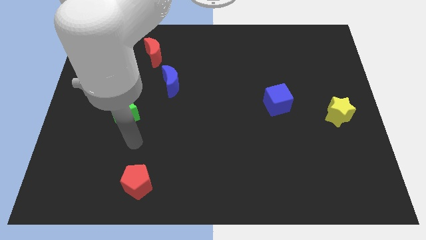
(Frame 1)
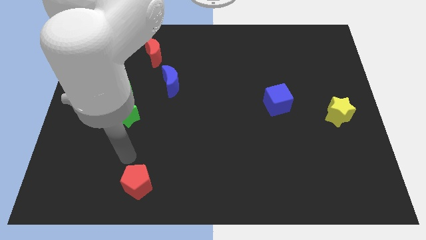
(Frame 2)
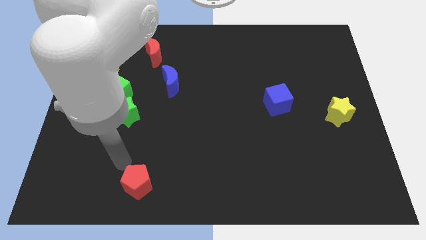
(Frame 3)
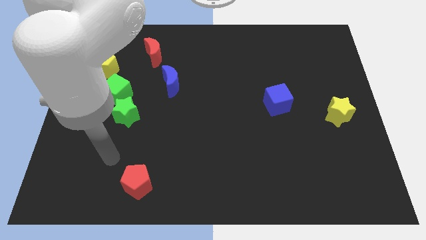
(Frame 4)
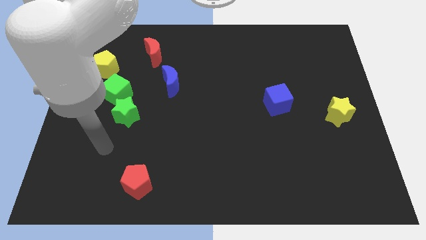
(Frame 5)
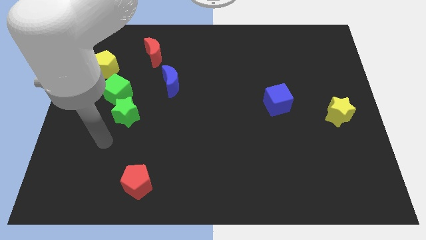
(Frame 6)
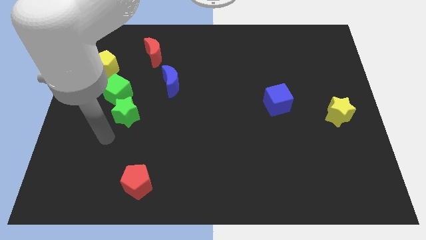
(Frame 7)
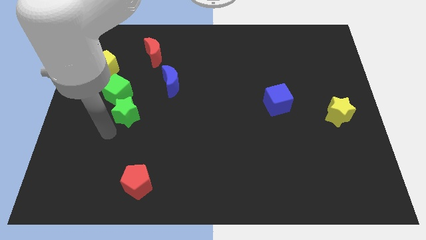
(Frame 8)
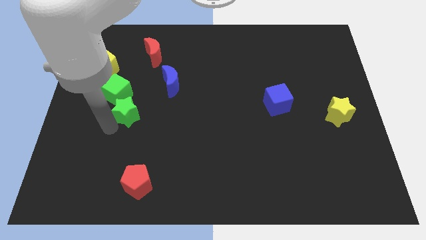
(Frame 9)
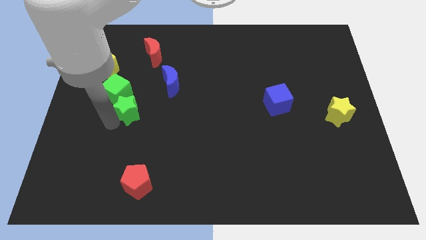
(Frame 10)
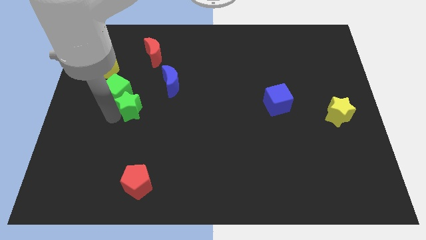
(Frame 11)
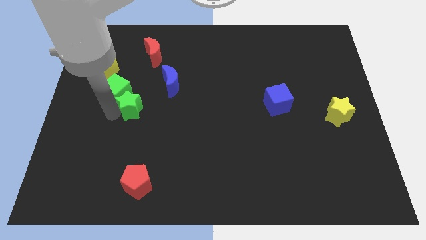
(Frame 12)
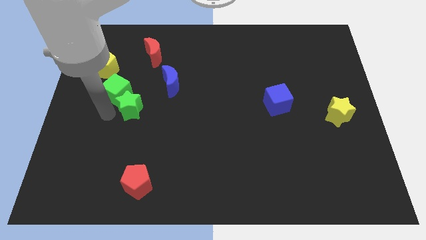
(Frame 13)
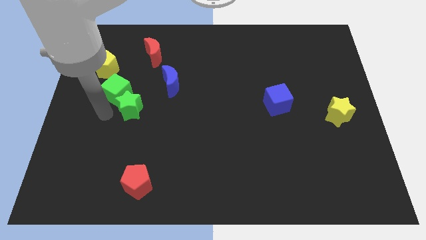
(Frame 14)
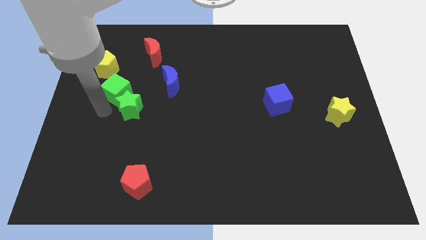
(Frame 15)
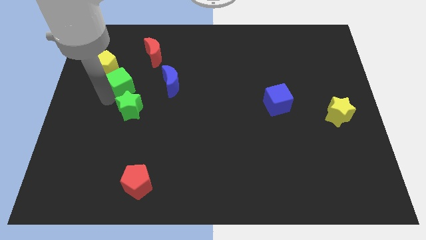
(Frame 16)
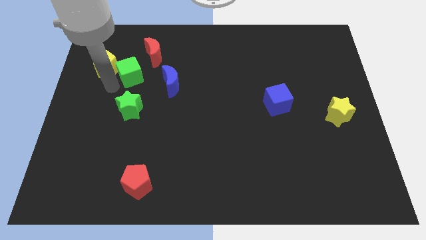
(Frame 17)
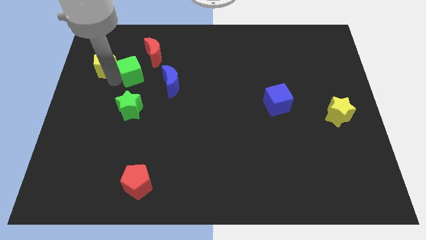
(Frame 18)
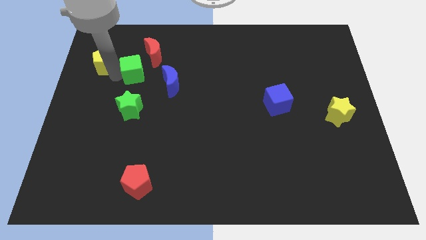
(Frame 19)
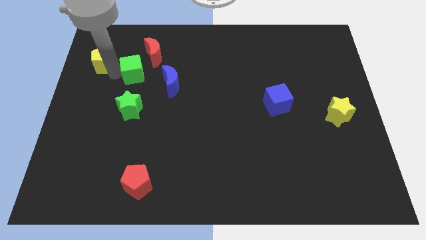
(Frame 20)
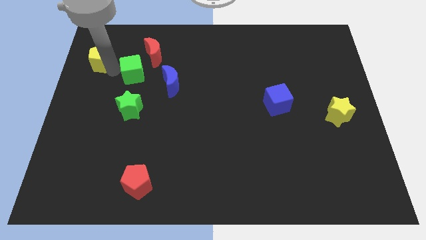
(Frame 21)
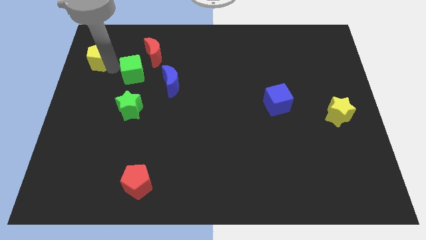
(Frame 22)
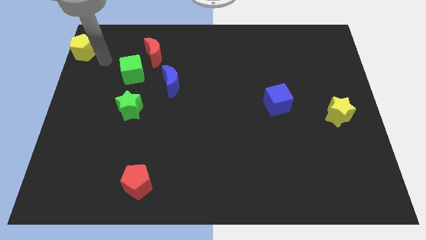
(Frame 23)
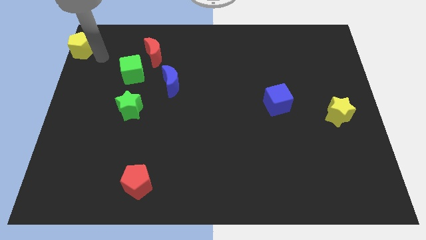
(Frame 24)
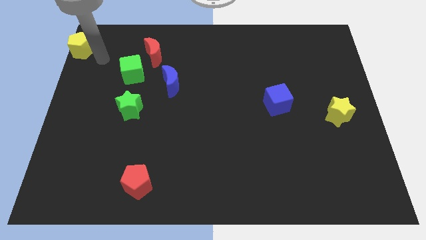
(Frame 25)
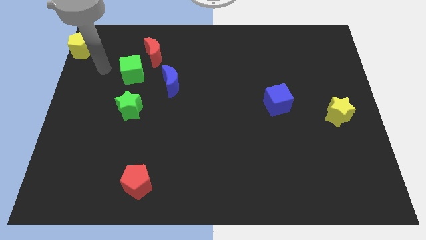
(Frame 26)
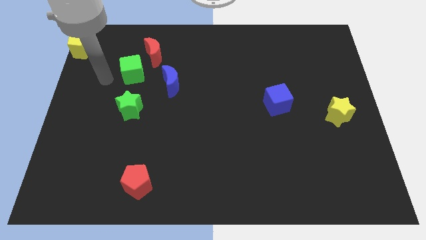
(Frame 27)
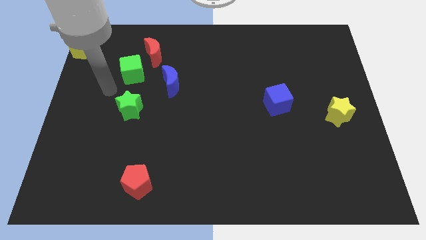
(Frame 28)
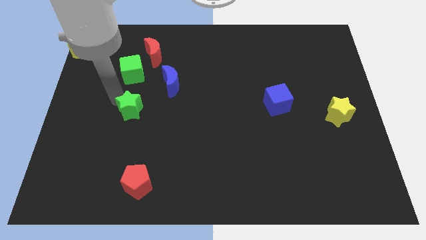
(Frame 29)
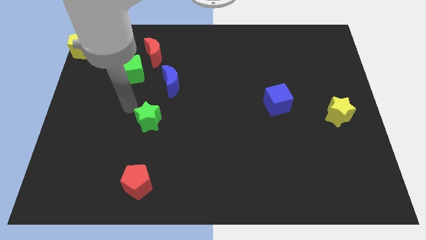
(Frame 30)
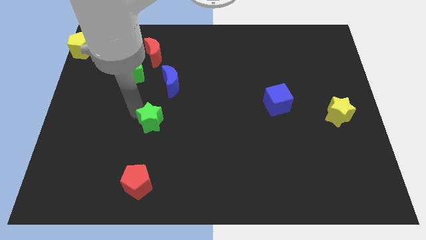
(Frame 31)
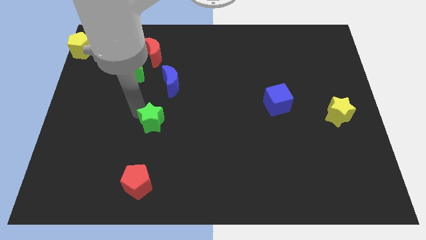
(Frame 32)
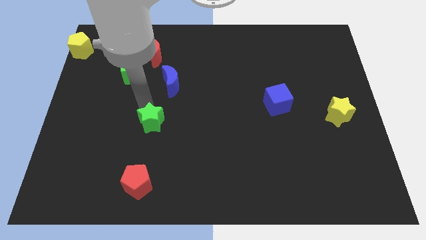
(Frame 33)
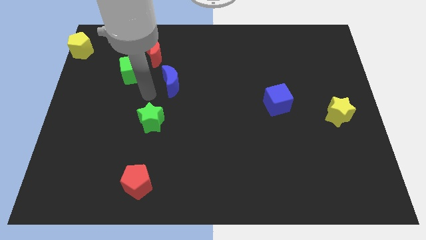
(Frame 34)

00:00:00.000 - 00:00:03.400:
place the green star in between the green cube and red pentagon

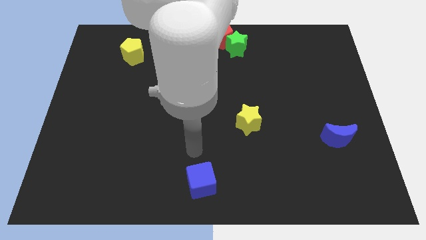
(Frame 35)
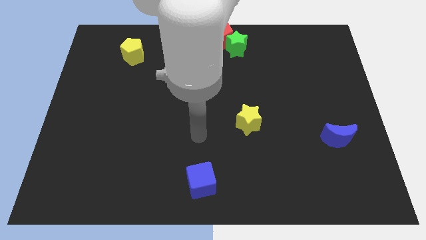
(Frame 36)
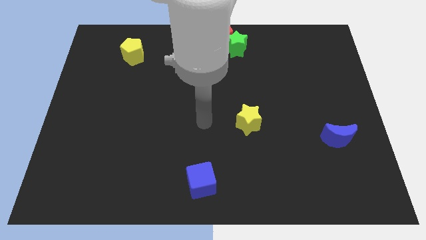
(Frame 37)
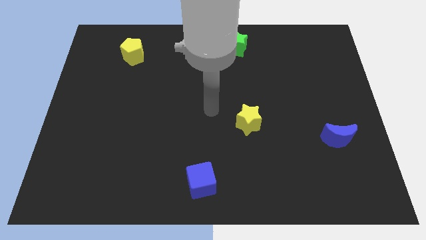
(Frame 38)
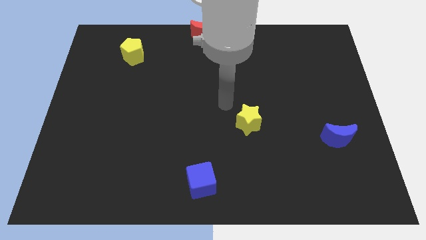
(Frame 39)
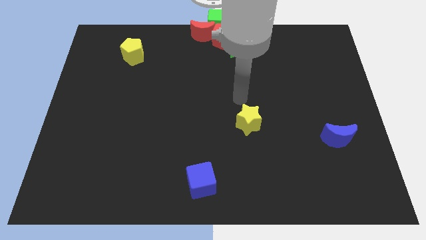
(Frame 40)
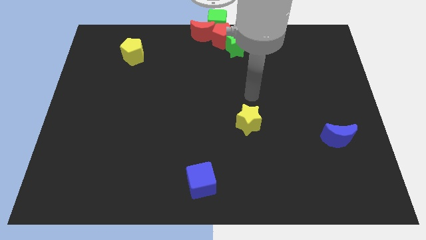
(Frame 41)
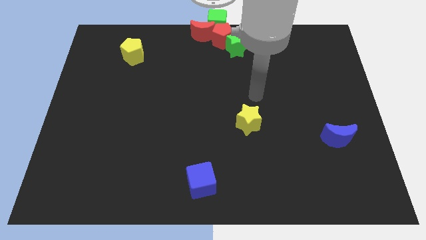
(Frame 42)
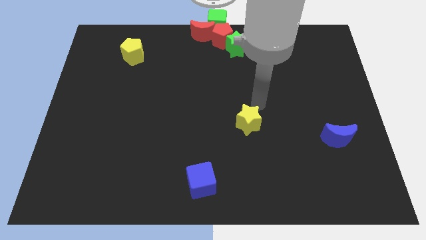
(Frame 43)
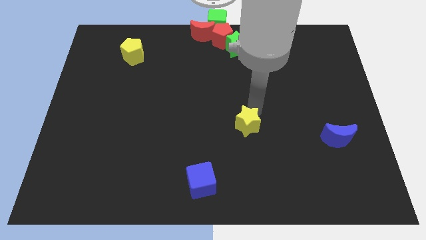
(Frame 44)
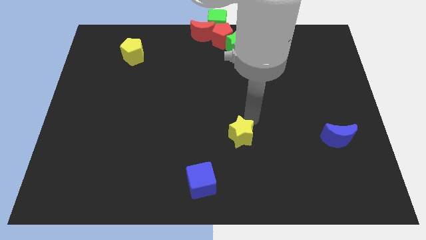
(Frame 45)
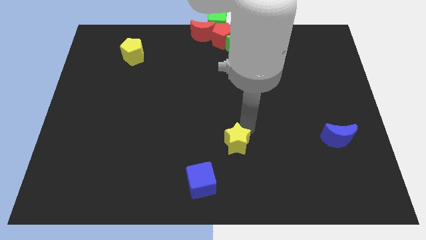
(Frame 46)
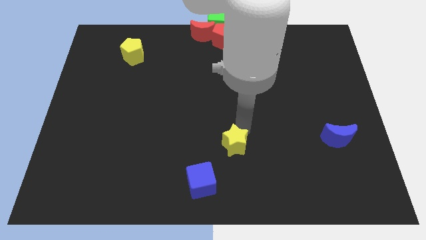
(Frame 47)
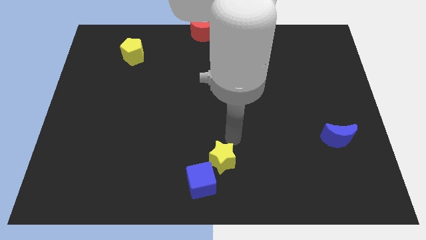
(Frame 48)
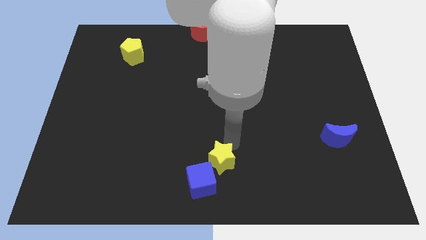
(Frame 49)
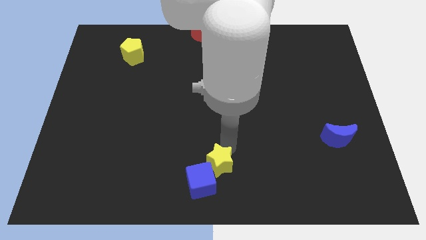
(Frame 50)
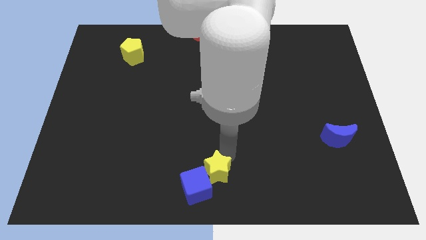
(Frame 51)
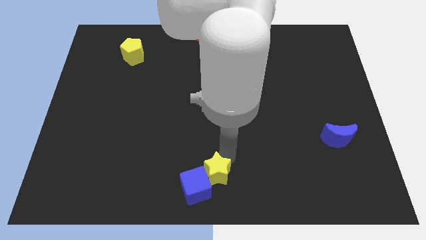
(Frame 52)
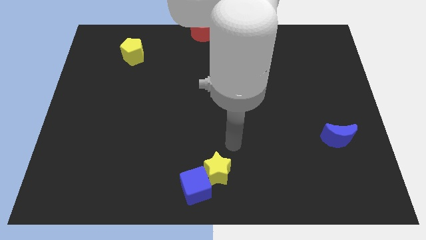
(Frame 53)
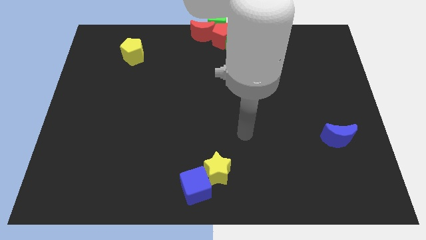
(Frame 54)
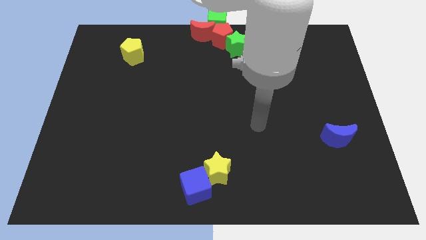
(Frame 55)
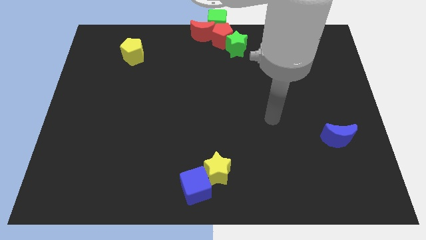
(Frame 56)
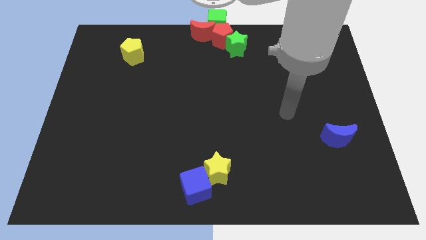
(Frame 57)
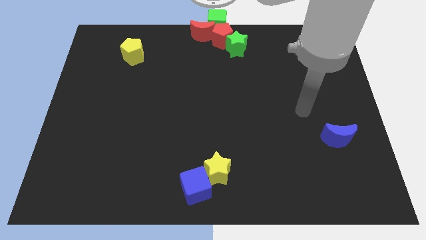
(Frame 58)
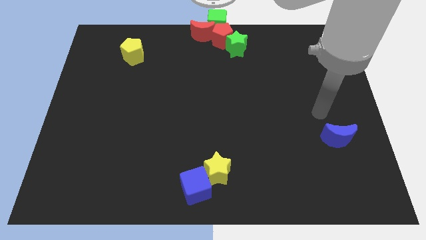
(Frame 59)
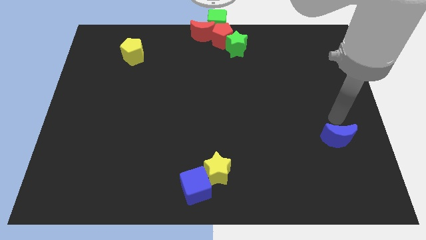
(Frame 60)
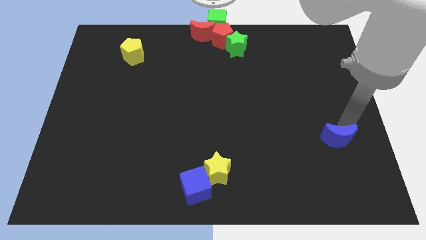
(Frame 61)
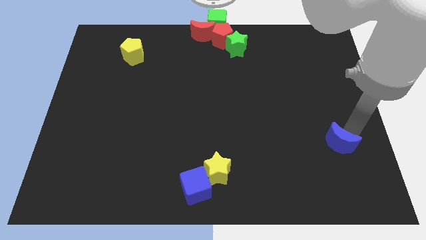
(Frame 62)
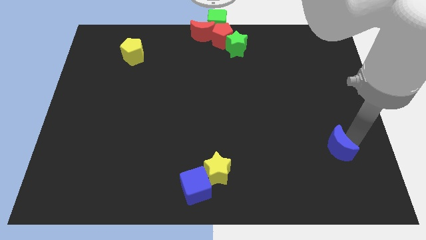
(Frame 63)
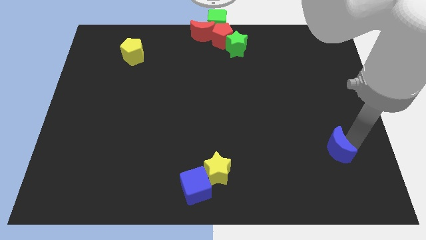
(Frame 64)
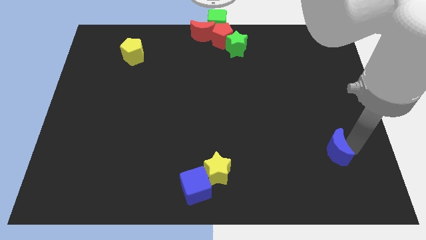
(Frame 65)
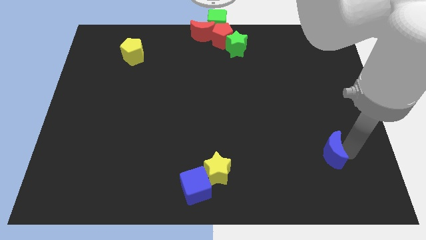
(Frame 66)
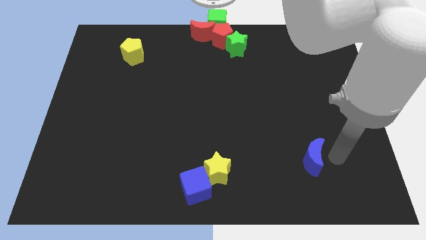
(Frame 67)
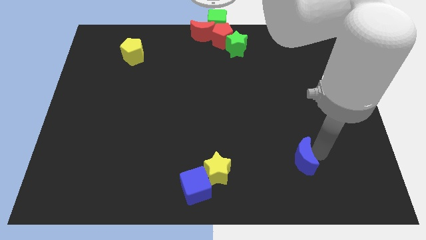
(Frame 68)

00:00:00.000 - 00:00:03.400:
push the yellow star into the blue cube

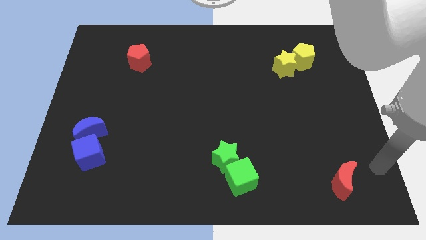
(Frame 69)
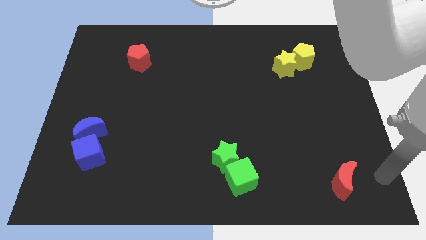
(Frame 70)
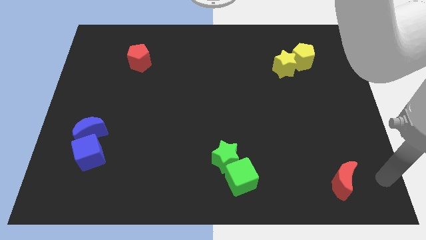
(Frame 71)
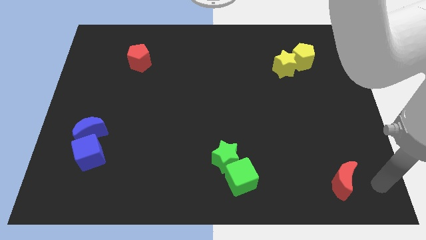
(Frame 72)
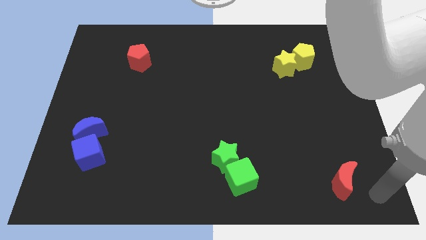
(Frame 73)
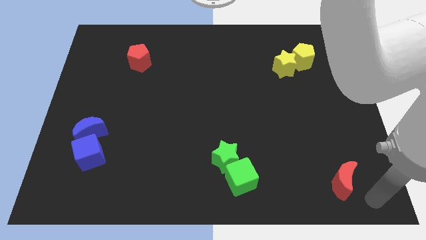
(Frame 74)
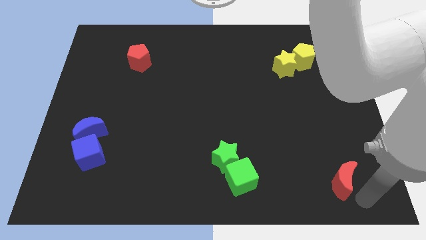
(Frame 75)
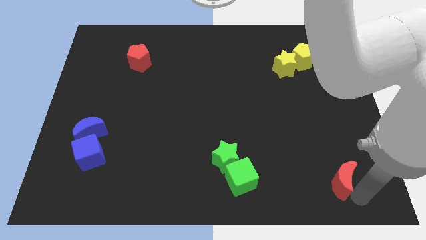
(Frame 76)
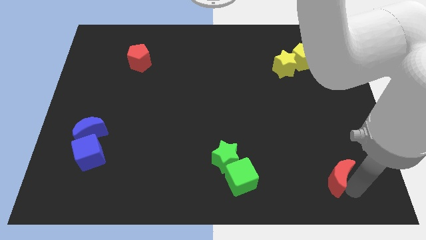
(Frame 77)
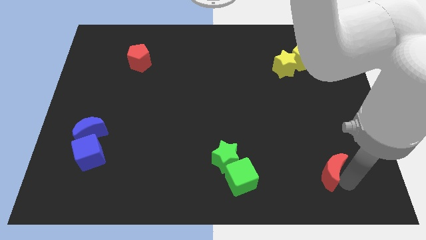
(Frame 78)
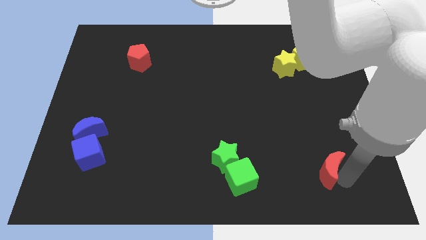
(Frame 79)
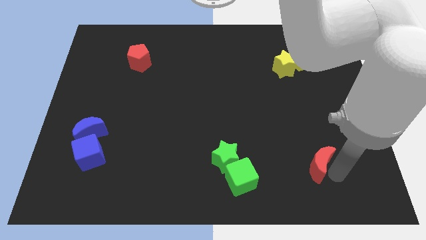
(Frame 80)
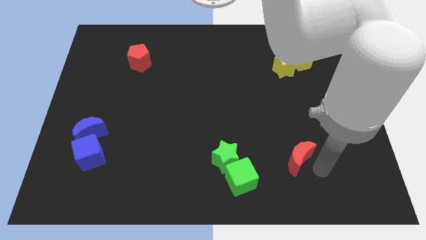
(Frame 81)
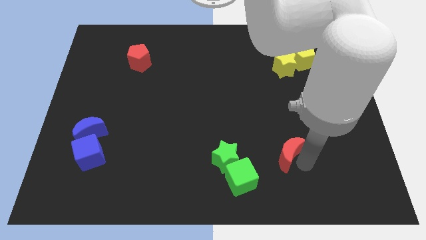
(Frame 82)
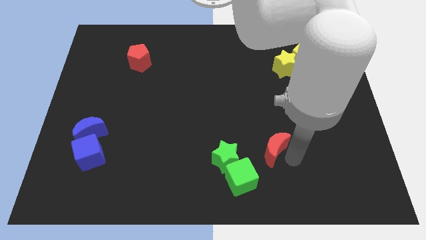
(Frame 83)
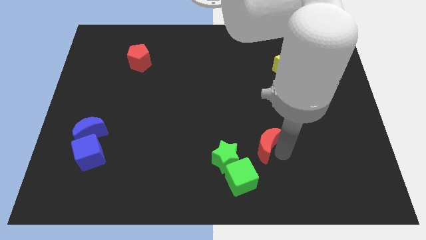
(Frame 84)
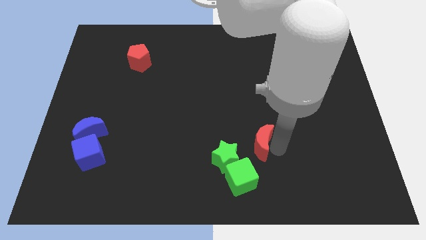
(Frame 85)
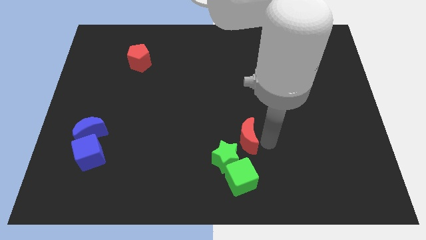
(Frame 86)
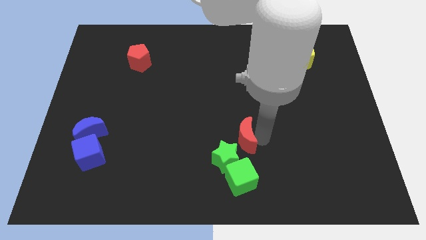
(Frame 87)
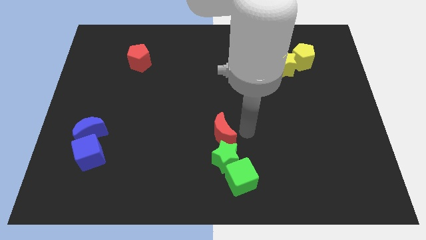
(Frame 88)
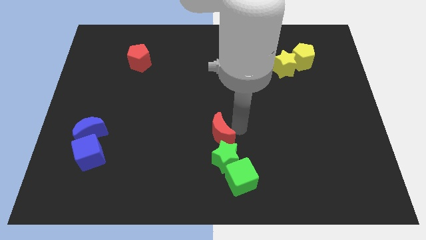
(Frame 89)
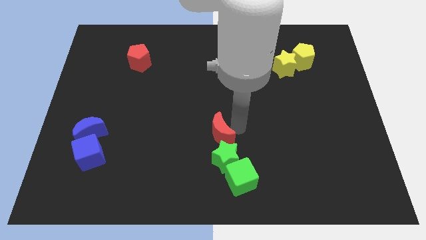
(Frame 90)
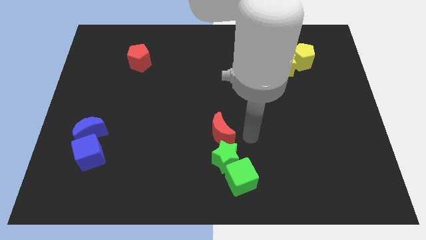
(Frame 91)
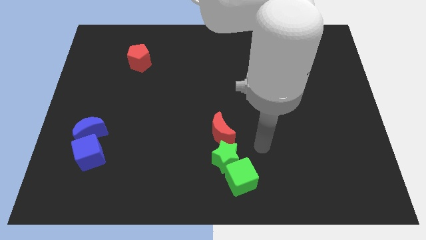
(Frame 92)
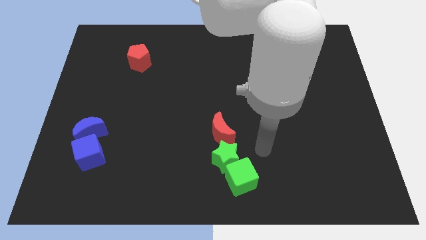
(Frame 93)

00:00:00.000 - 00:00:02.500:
move the red crescent to the top of the green star
